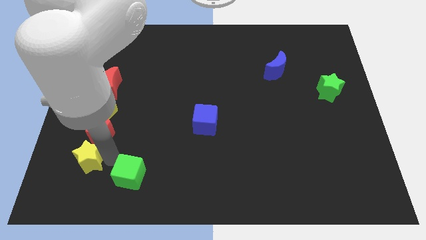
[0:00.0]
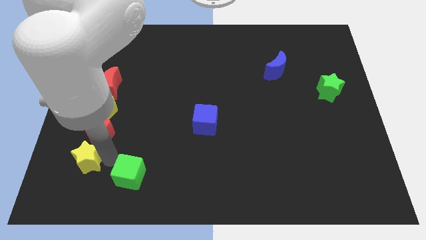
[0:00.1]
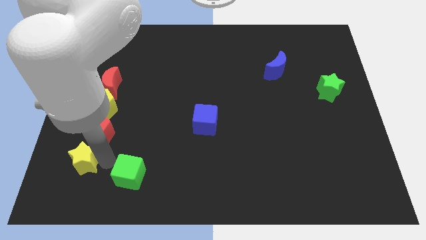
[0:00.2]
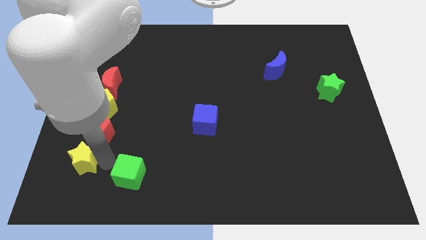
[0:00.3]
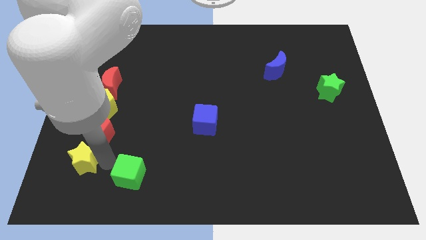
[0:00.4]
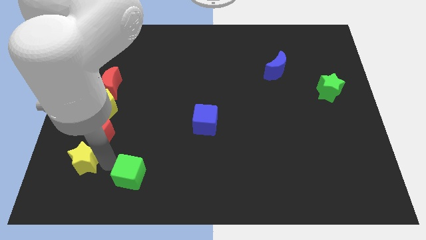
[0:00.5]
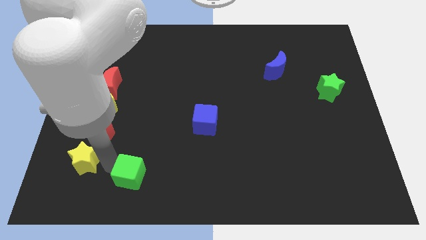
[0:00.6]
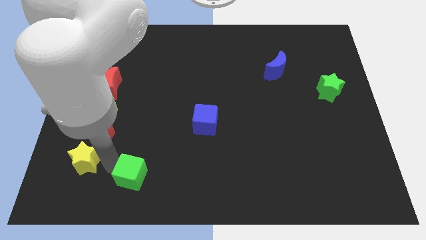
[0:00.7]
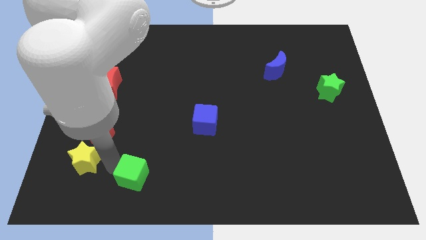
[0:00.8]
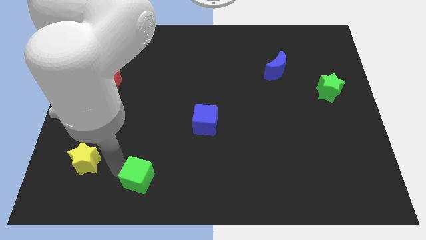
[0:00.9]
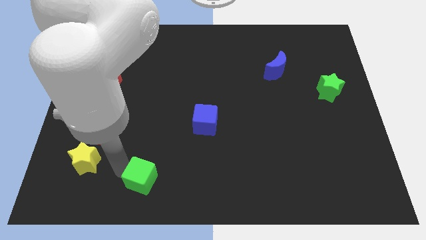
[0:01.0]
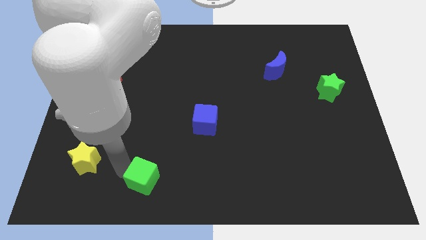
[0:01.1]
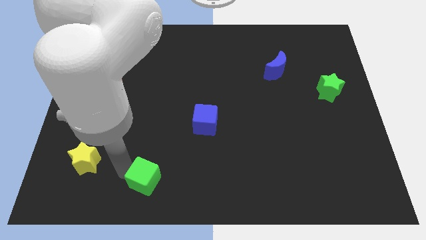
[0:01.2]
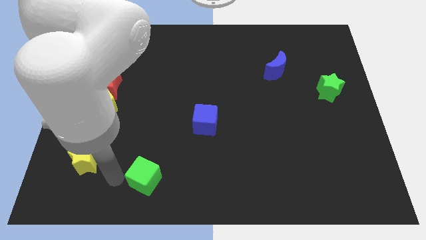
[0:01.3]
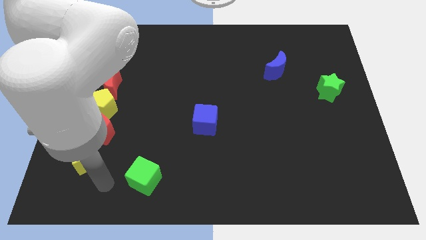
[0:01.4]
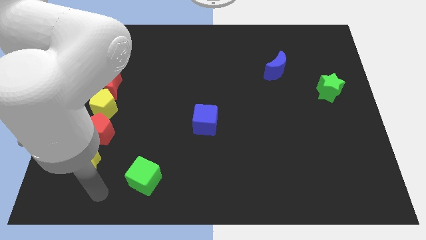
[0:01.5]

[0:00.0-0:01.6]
slightly push the green cube to the right of yellow star

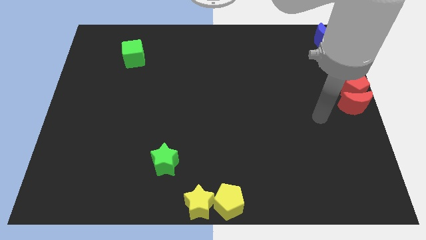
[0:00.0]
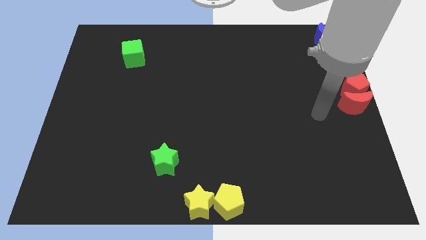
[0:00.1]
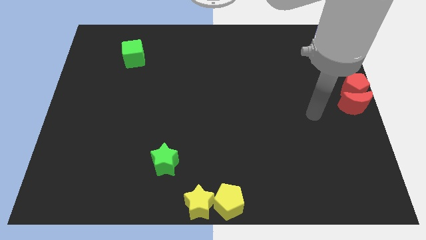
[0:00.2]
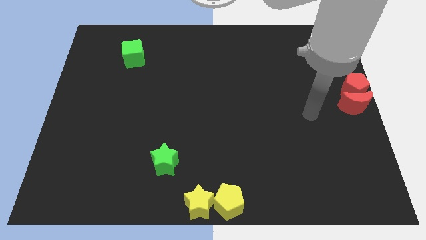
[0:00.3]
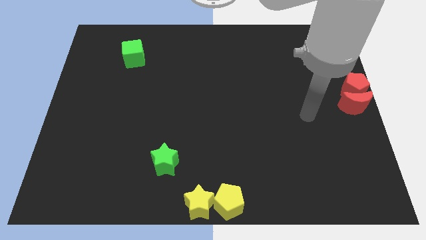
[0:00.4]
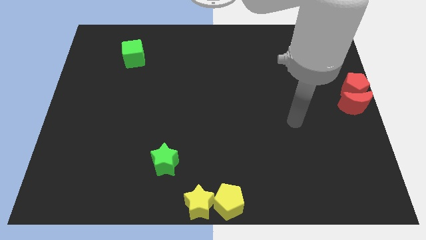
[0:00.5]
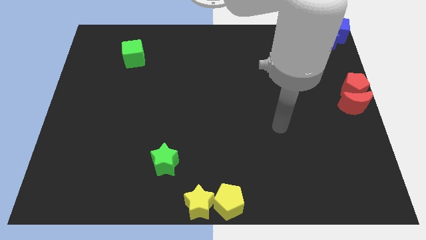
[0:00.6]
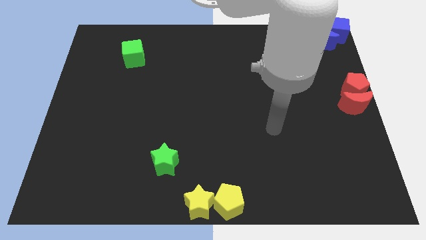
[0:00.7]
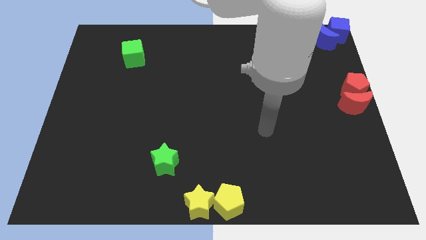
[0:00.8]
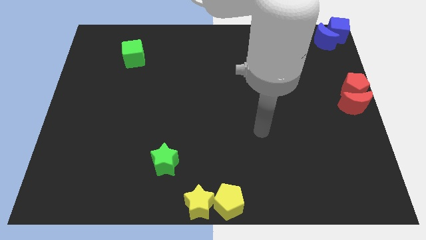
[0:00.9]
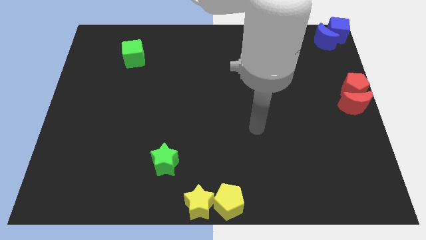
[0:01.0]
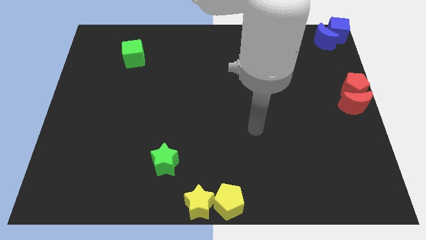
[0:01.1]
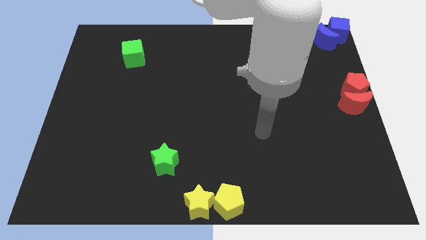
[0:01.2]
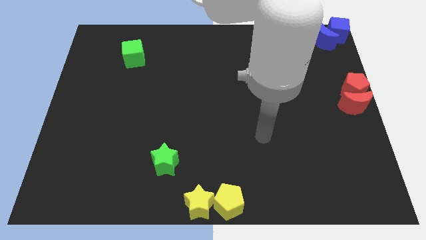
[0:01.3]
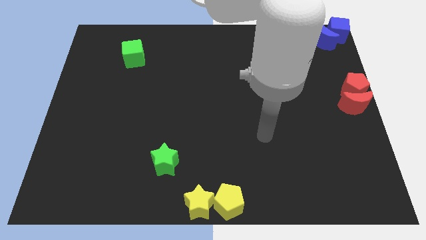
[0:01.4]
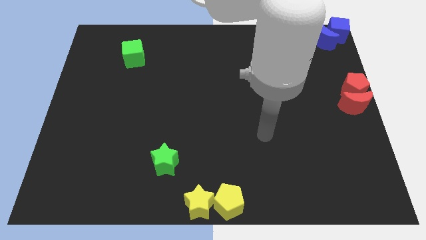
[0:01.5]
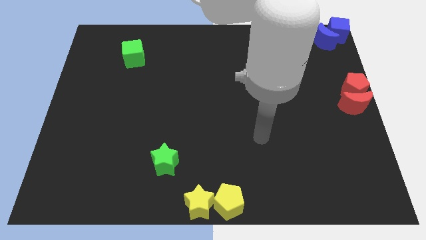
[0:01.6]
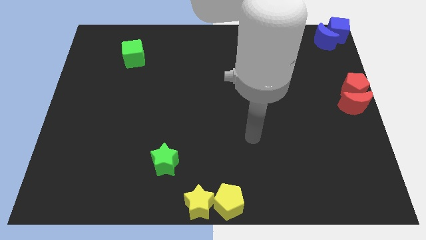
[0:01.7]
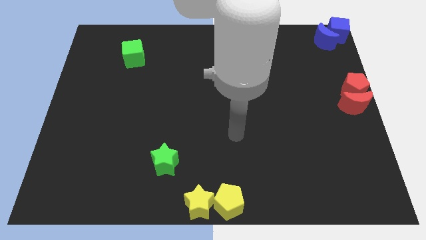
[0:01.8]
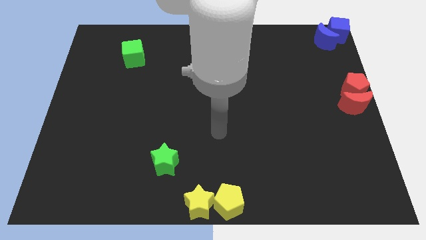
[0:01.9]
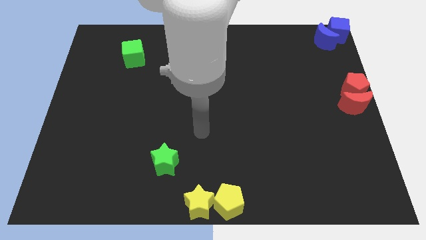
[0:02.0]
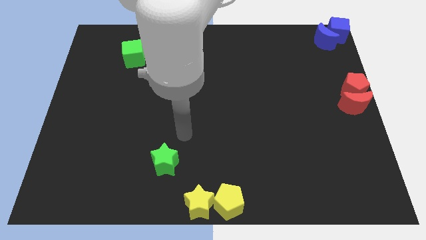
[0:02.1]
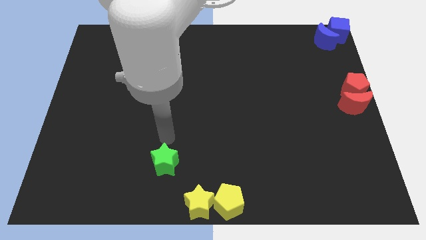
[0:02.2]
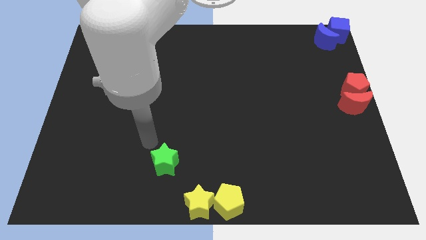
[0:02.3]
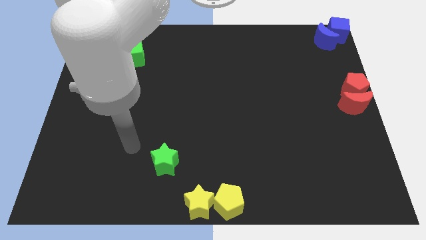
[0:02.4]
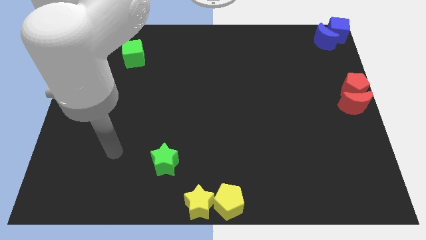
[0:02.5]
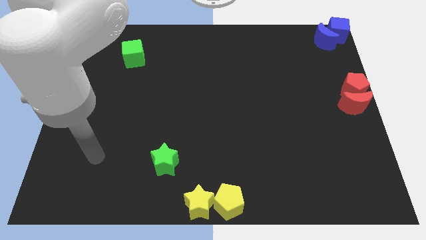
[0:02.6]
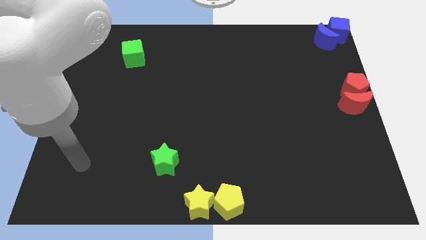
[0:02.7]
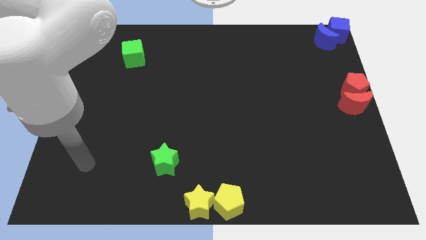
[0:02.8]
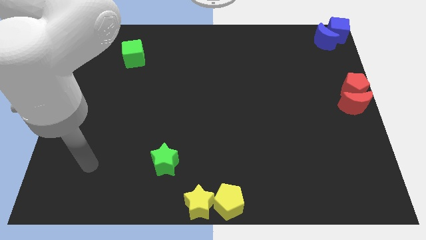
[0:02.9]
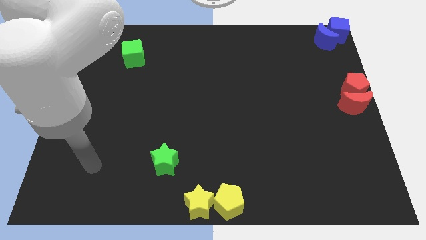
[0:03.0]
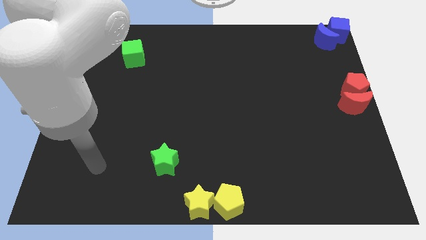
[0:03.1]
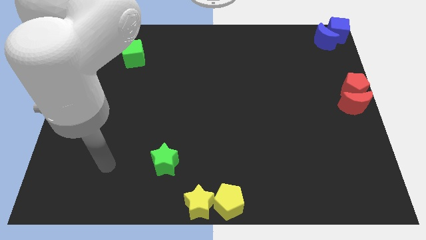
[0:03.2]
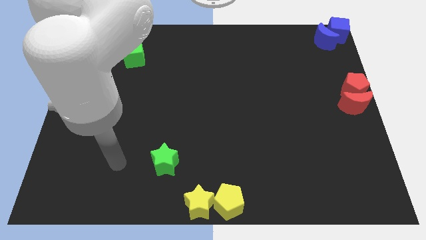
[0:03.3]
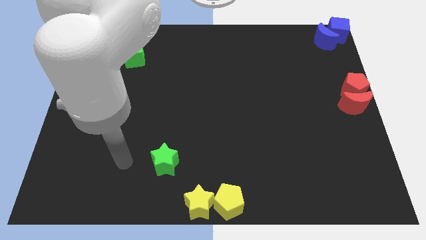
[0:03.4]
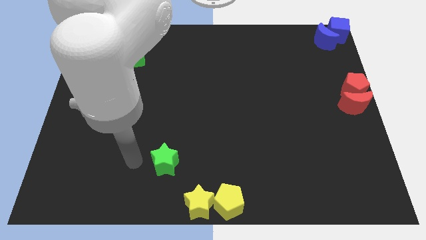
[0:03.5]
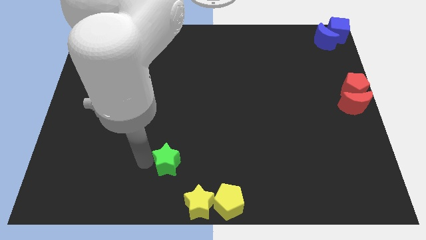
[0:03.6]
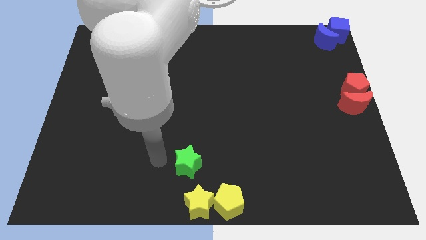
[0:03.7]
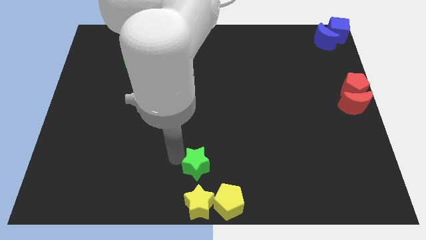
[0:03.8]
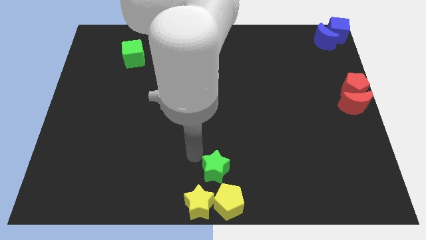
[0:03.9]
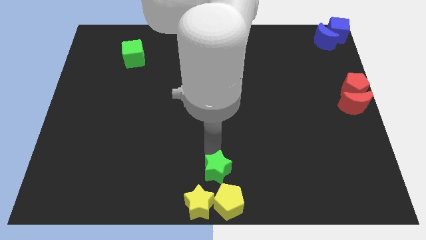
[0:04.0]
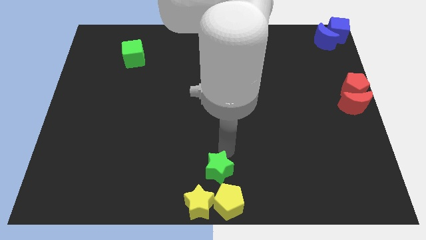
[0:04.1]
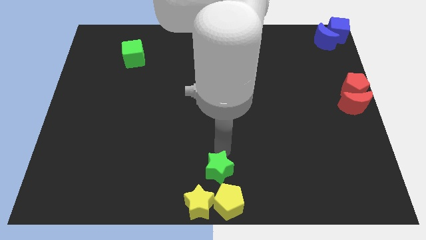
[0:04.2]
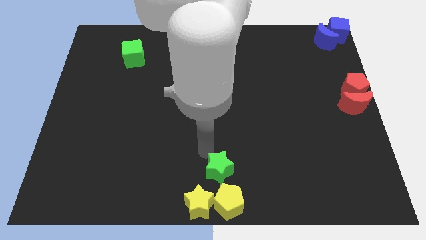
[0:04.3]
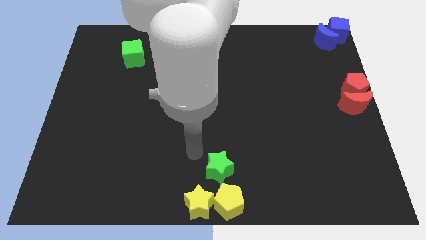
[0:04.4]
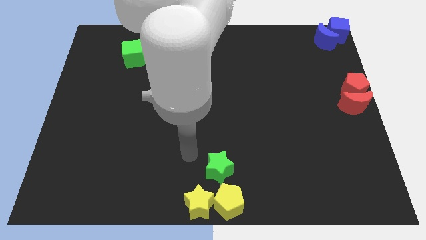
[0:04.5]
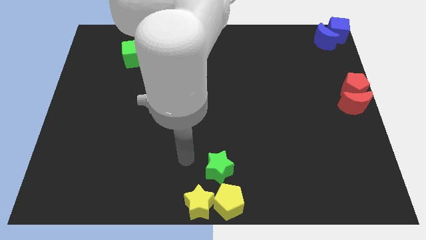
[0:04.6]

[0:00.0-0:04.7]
place the green star above the yellow blocks

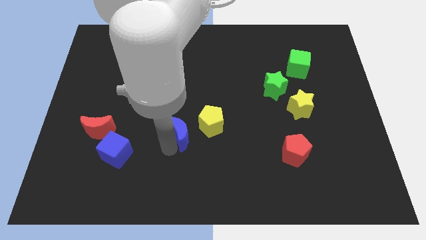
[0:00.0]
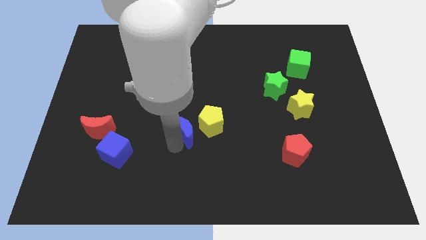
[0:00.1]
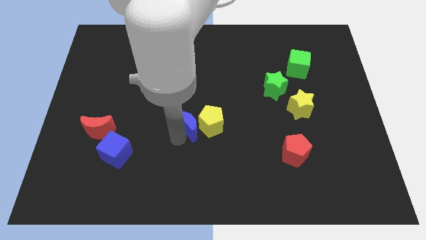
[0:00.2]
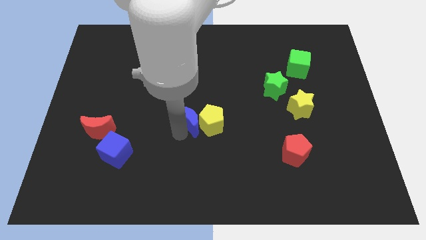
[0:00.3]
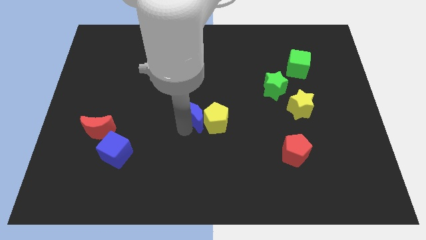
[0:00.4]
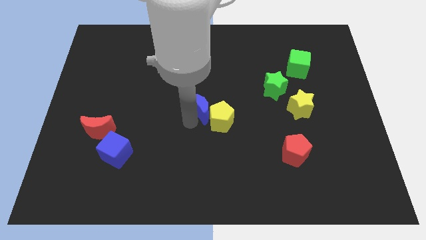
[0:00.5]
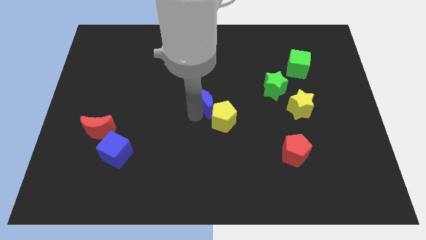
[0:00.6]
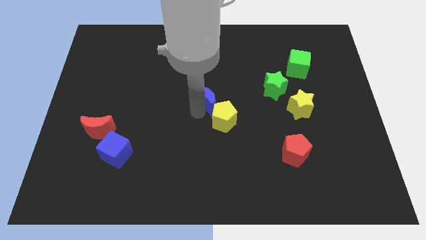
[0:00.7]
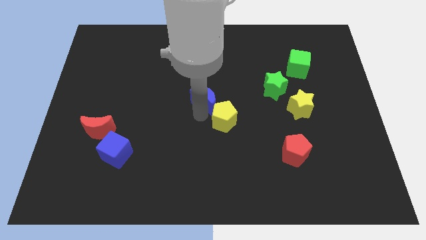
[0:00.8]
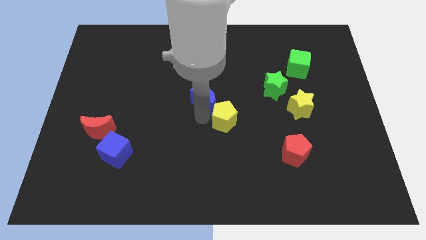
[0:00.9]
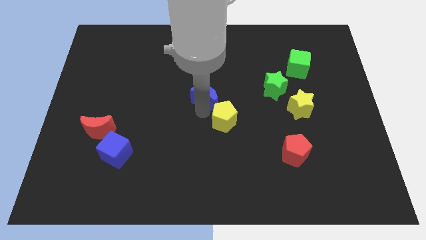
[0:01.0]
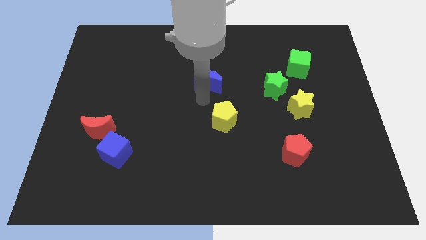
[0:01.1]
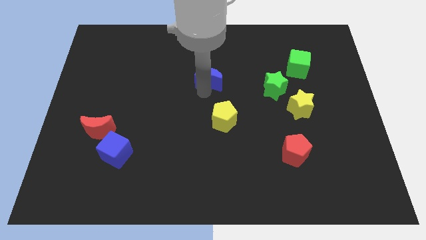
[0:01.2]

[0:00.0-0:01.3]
push the blue moon into the yellow pentagon

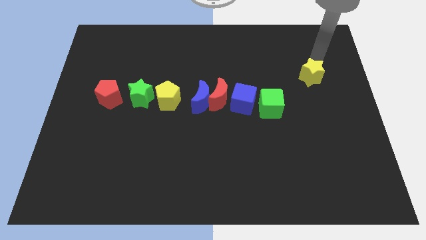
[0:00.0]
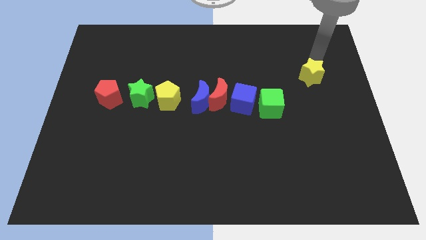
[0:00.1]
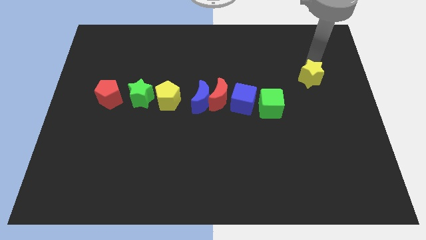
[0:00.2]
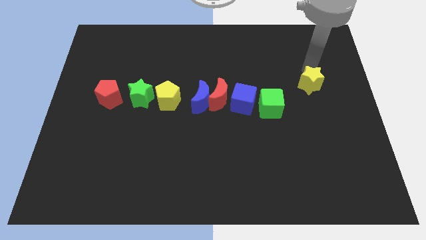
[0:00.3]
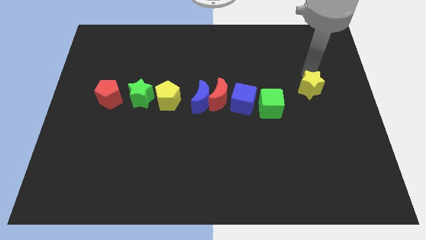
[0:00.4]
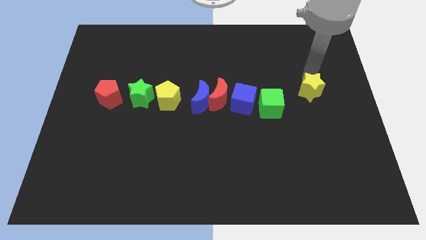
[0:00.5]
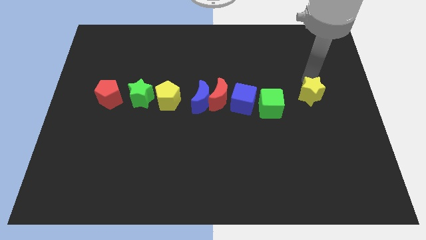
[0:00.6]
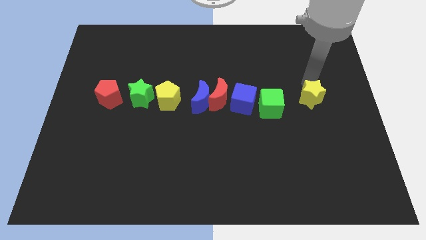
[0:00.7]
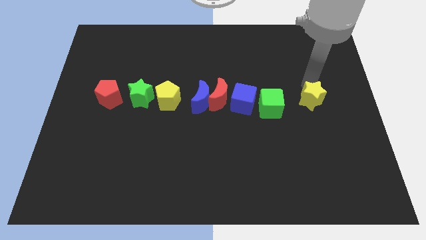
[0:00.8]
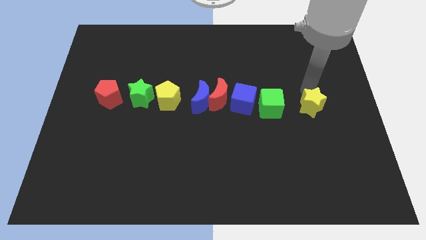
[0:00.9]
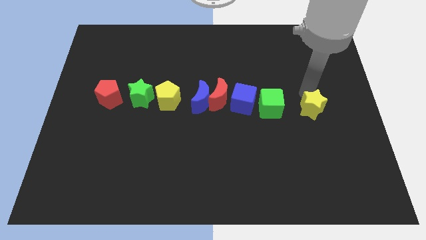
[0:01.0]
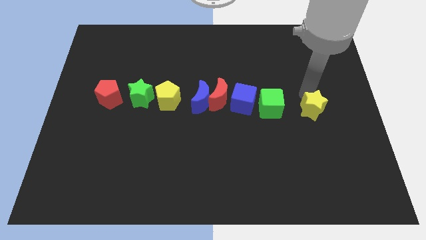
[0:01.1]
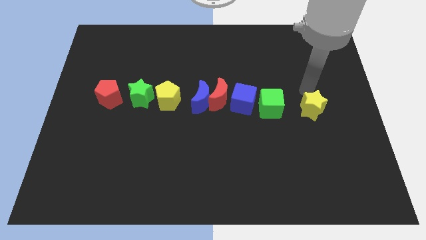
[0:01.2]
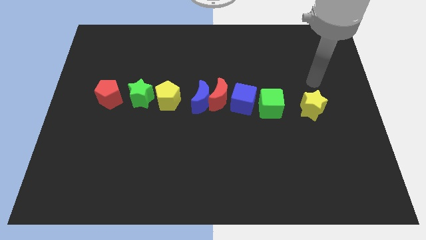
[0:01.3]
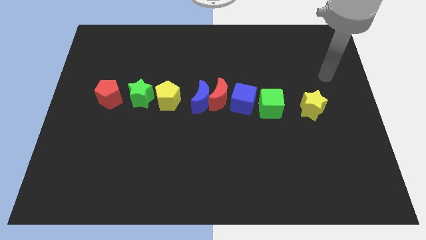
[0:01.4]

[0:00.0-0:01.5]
push the yellow star towards the right of green cube
